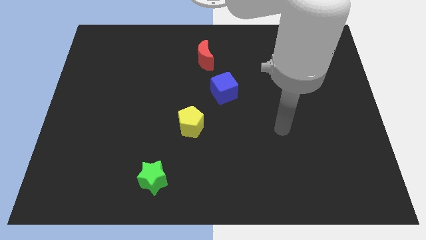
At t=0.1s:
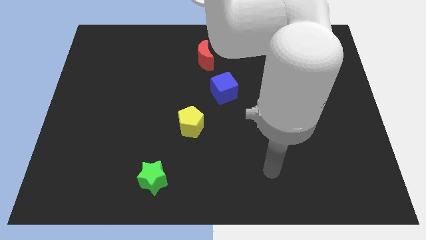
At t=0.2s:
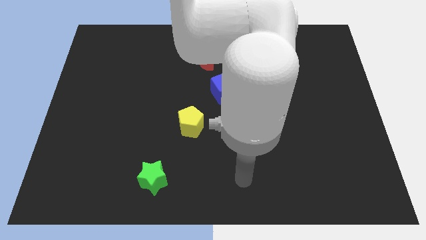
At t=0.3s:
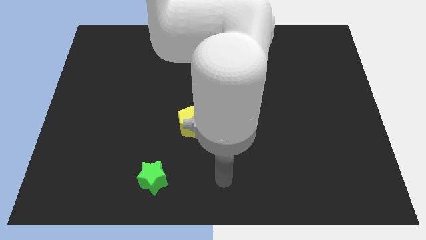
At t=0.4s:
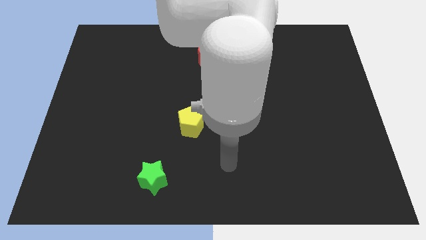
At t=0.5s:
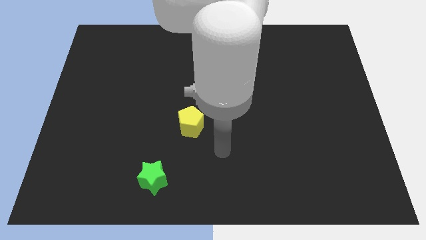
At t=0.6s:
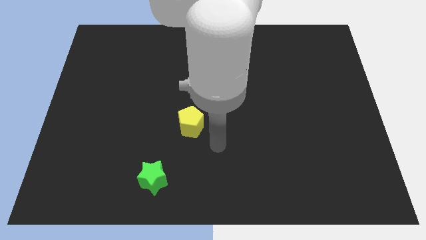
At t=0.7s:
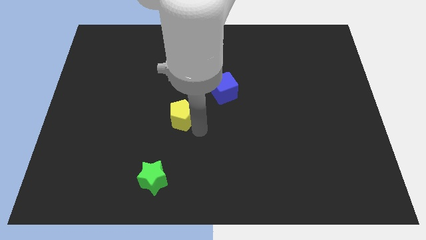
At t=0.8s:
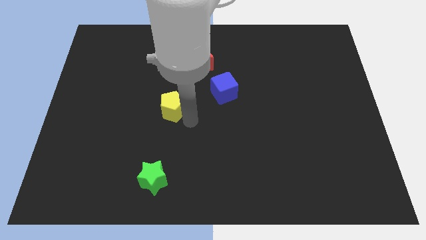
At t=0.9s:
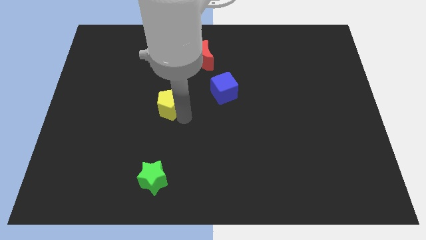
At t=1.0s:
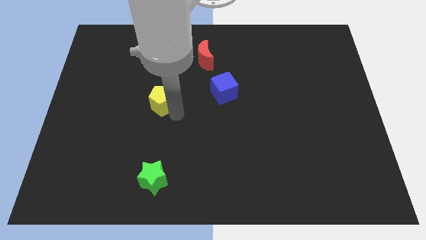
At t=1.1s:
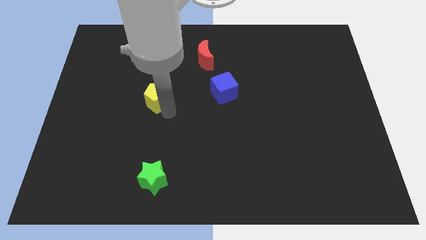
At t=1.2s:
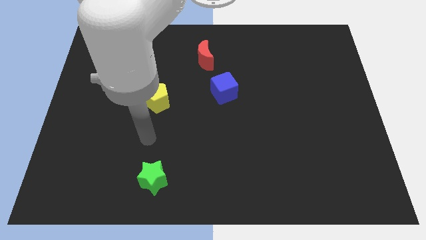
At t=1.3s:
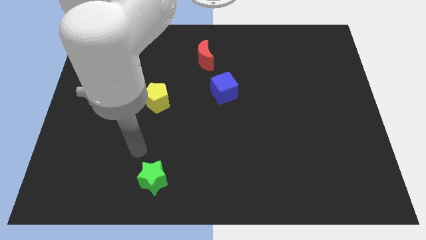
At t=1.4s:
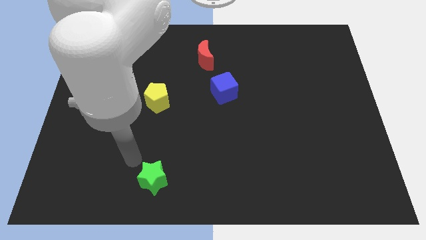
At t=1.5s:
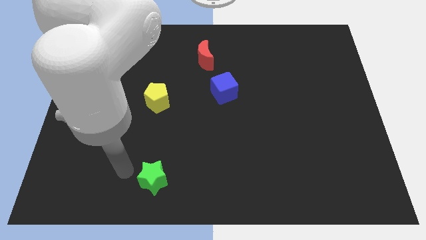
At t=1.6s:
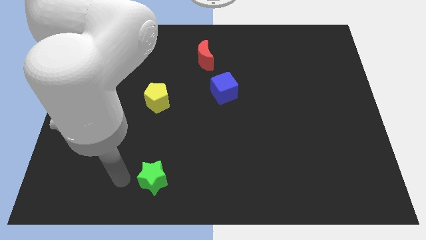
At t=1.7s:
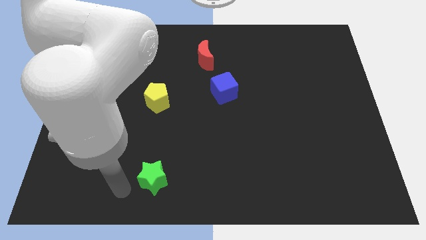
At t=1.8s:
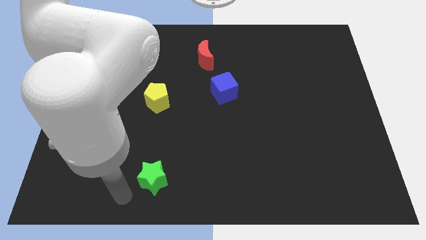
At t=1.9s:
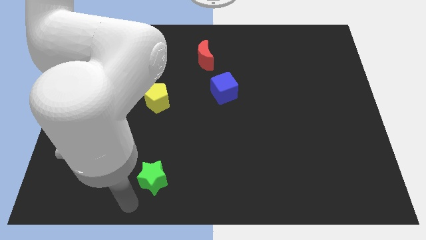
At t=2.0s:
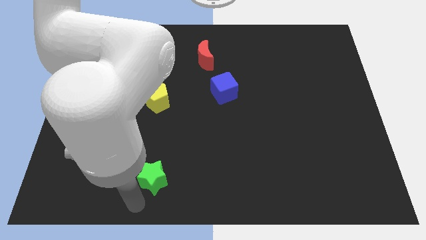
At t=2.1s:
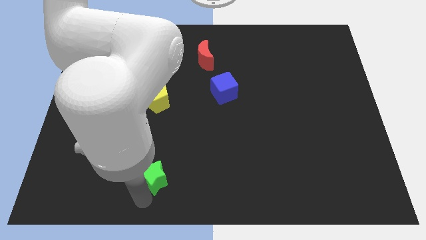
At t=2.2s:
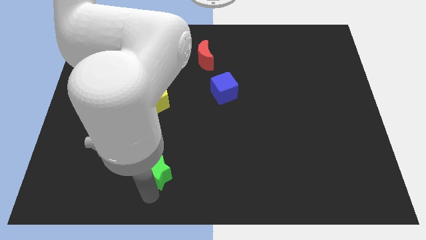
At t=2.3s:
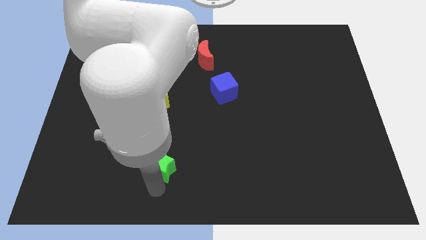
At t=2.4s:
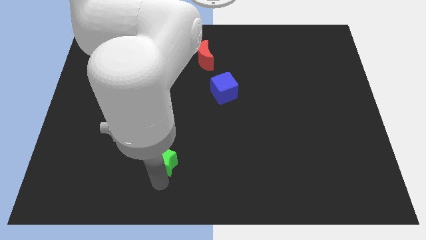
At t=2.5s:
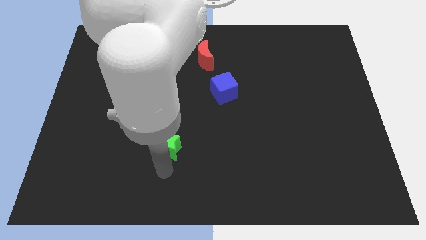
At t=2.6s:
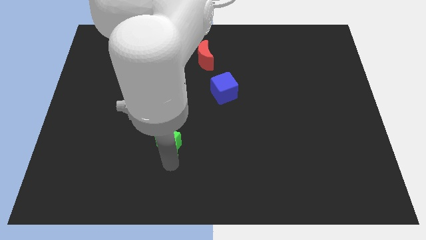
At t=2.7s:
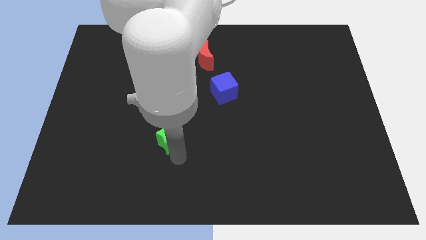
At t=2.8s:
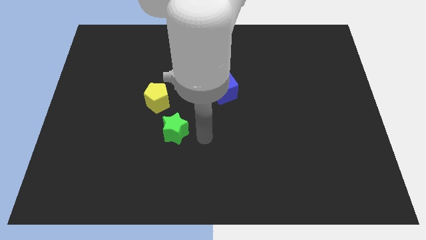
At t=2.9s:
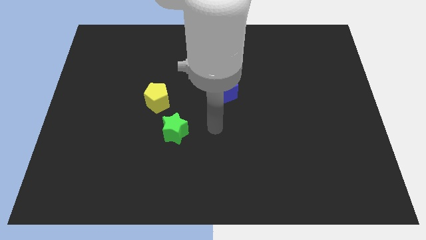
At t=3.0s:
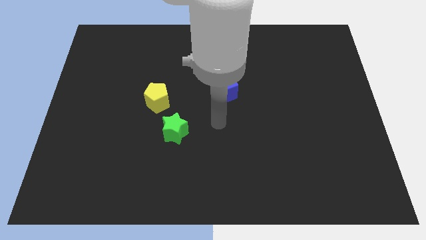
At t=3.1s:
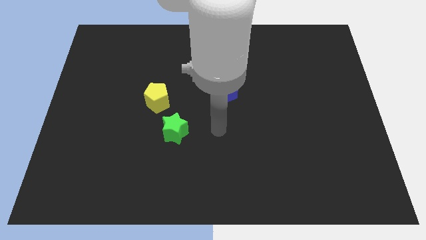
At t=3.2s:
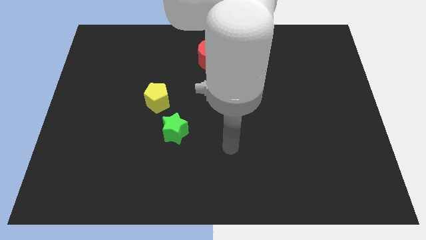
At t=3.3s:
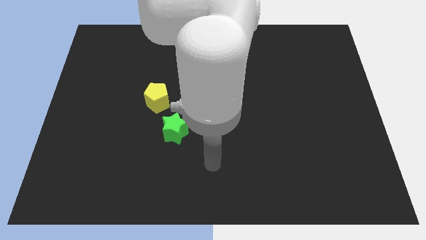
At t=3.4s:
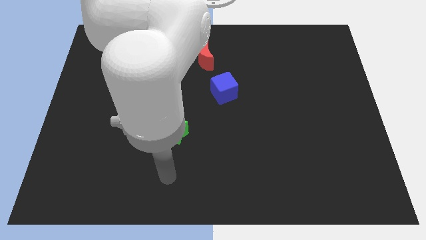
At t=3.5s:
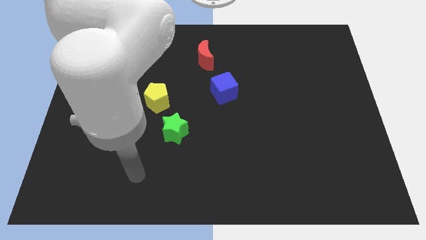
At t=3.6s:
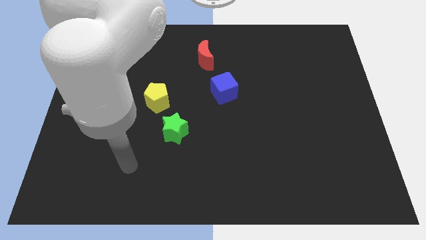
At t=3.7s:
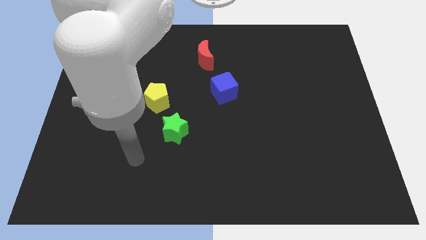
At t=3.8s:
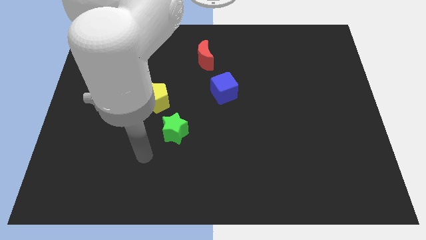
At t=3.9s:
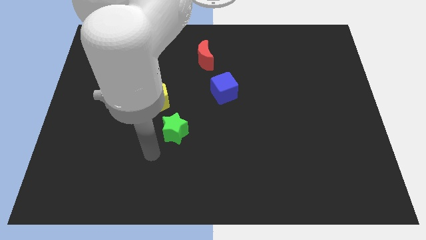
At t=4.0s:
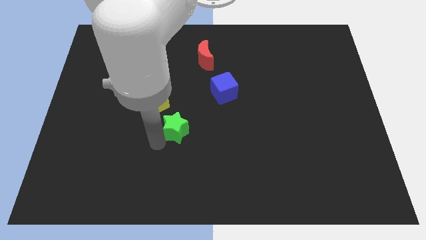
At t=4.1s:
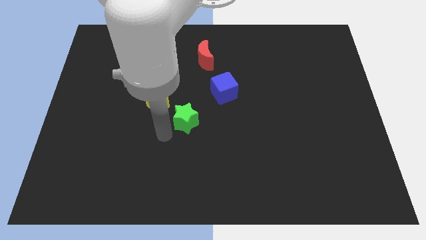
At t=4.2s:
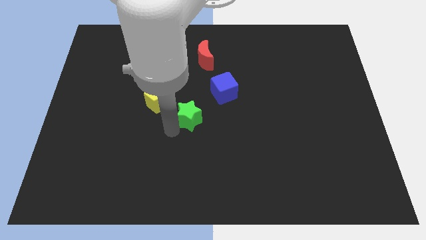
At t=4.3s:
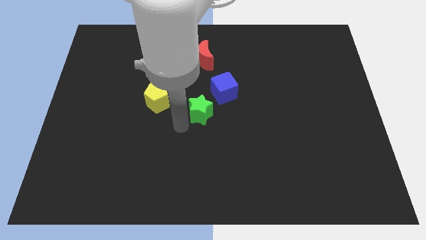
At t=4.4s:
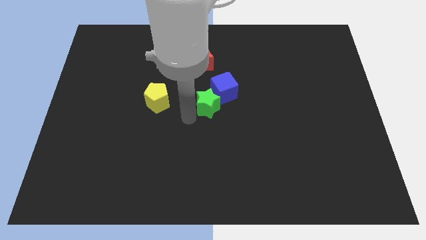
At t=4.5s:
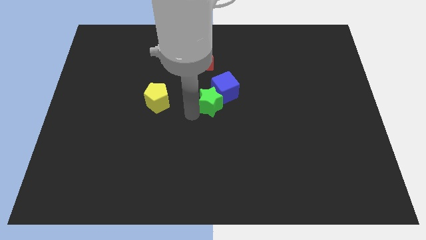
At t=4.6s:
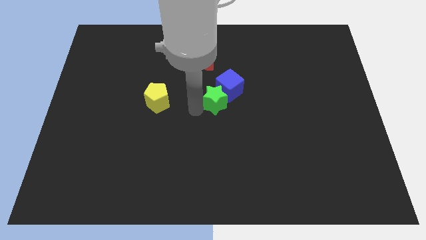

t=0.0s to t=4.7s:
put the green star towards the blue cube

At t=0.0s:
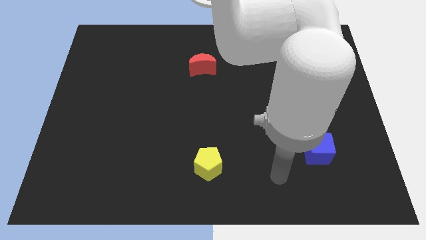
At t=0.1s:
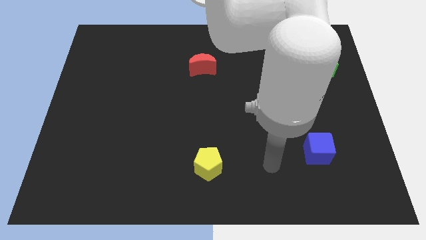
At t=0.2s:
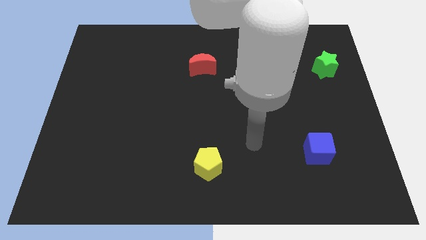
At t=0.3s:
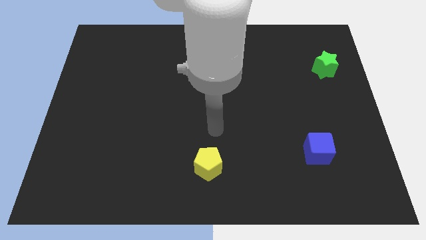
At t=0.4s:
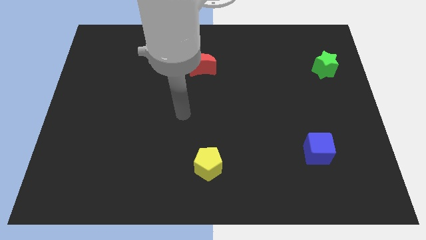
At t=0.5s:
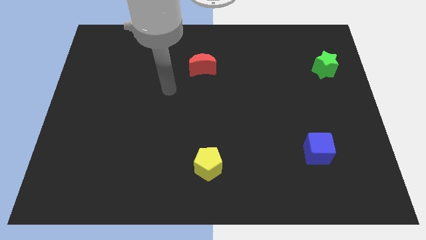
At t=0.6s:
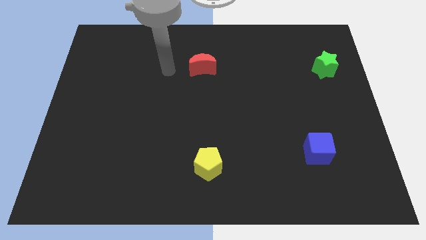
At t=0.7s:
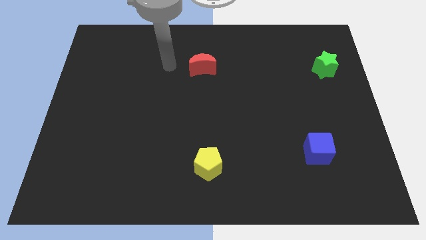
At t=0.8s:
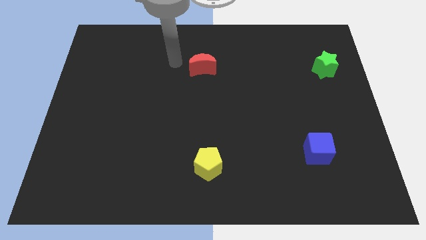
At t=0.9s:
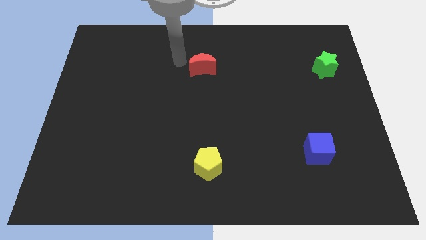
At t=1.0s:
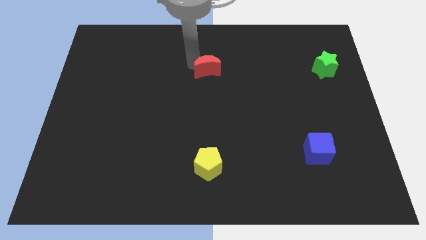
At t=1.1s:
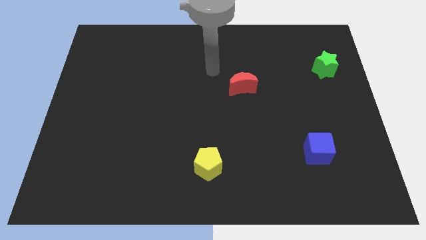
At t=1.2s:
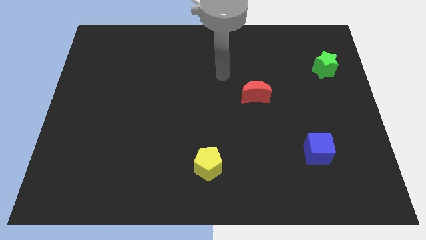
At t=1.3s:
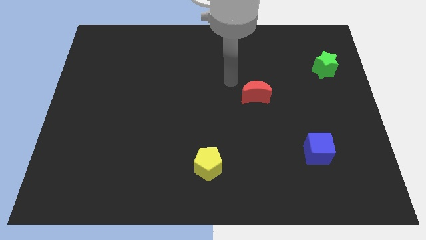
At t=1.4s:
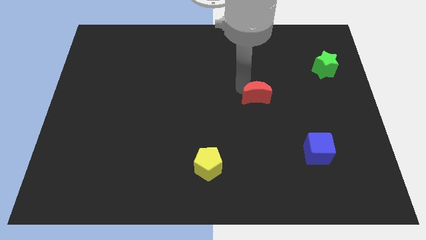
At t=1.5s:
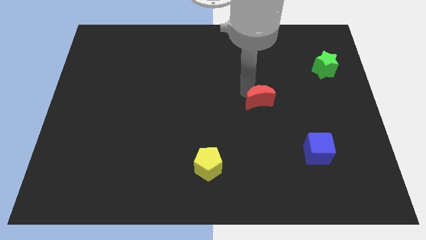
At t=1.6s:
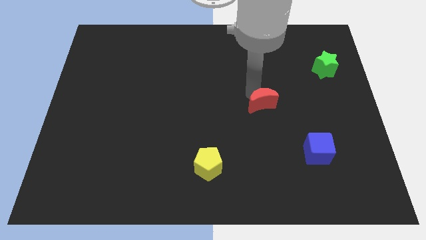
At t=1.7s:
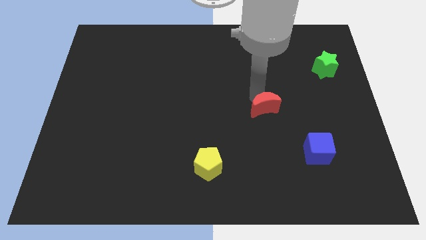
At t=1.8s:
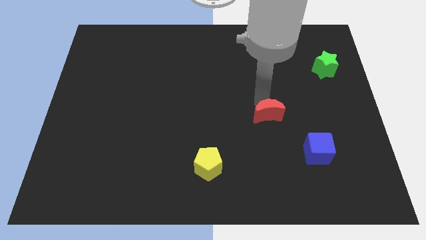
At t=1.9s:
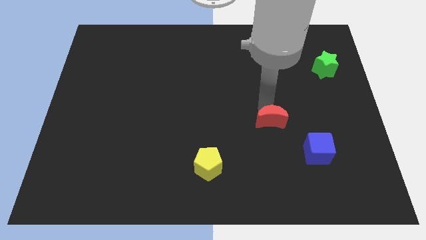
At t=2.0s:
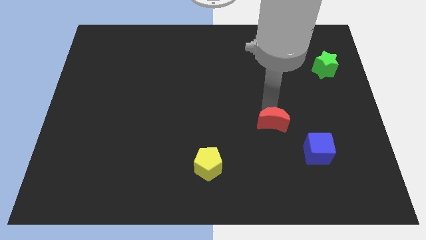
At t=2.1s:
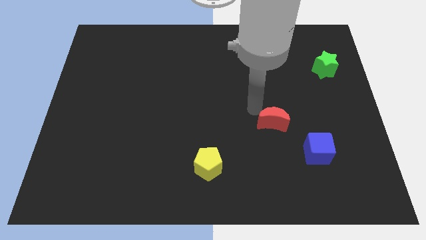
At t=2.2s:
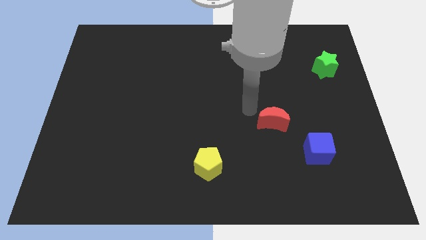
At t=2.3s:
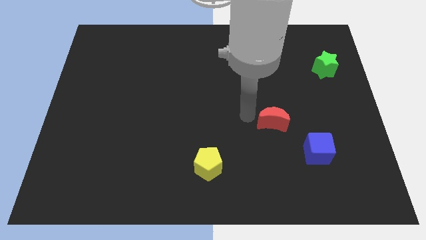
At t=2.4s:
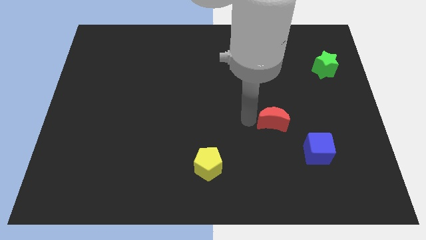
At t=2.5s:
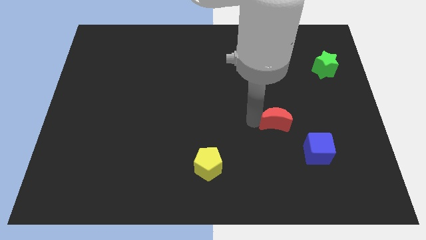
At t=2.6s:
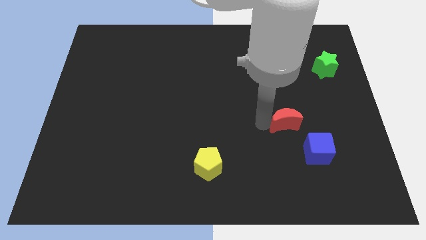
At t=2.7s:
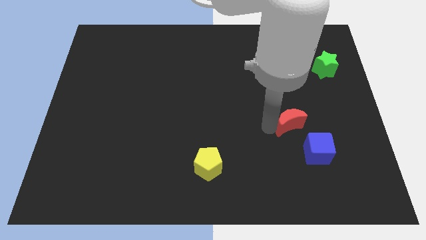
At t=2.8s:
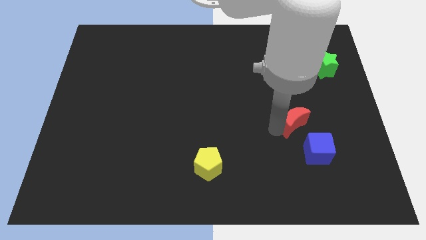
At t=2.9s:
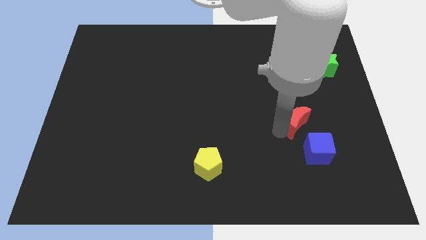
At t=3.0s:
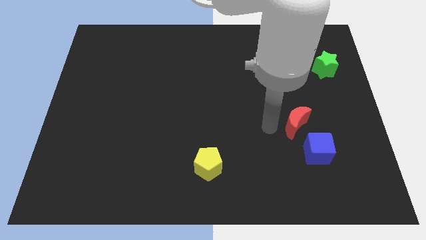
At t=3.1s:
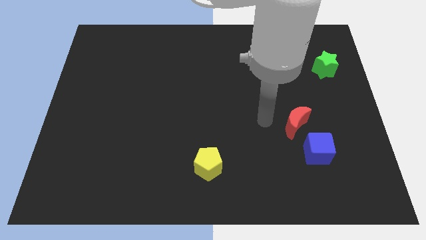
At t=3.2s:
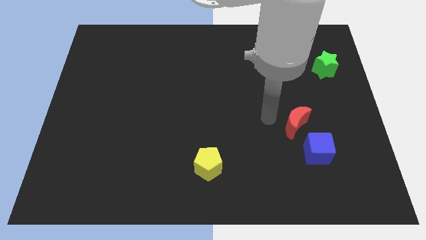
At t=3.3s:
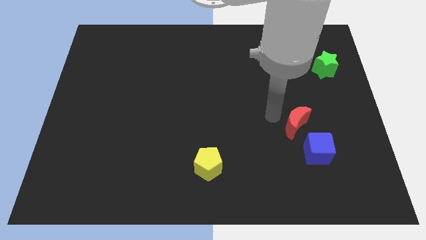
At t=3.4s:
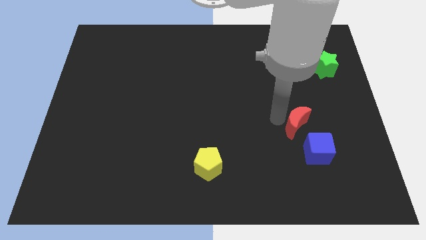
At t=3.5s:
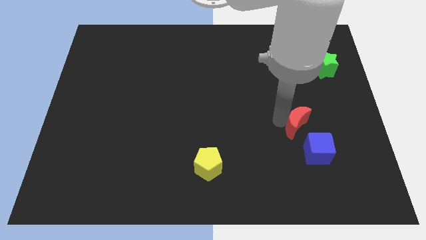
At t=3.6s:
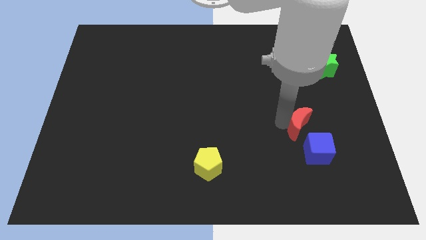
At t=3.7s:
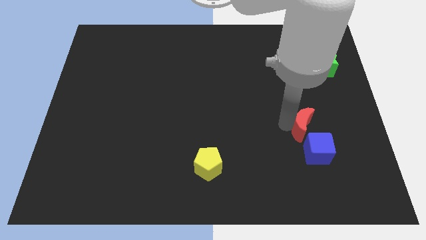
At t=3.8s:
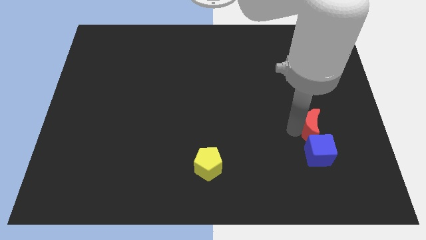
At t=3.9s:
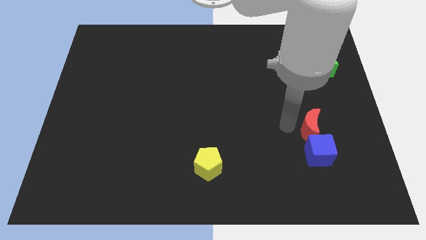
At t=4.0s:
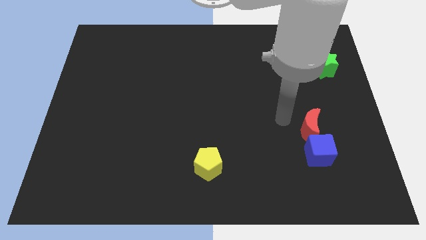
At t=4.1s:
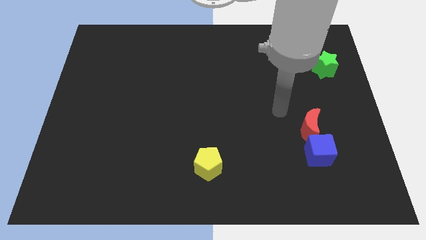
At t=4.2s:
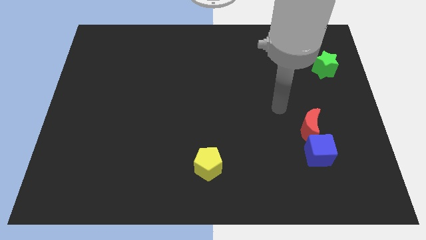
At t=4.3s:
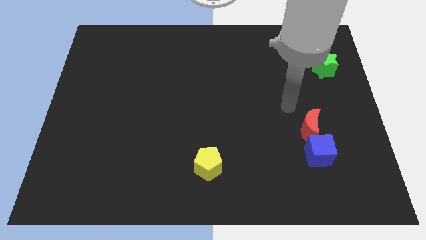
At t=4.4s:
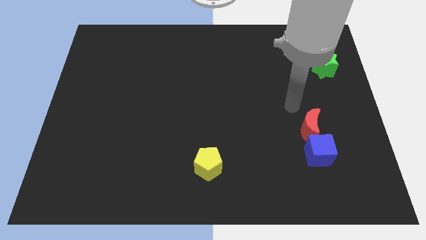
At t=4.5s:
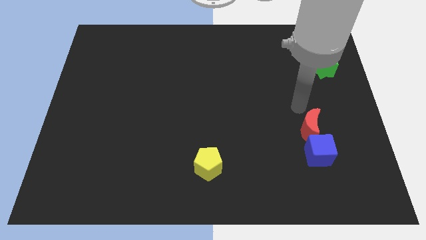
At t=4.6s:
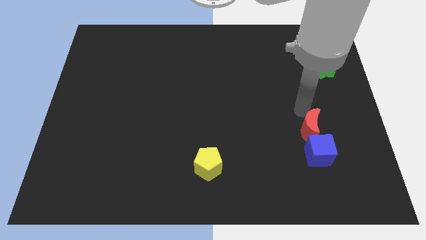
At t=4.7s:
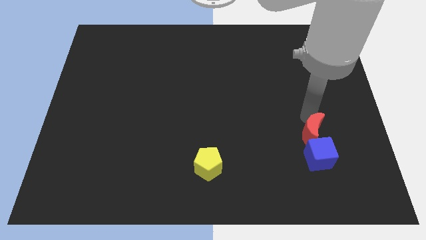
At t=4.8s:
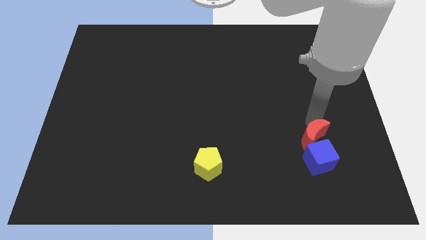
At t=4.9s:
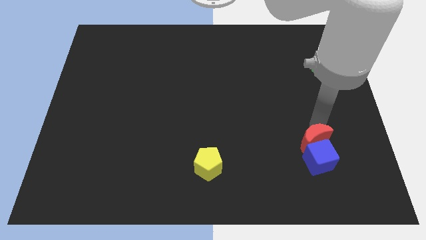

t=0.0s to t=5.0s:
slide the red block close to the cube
